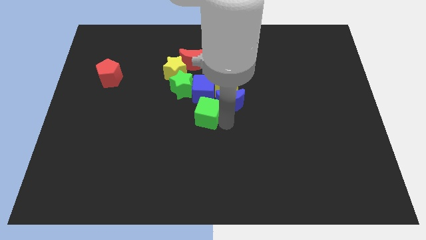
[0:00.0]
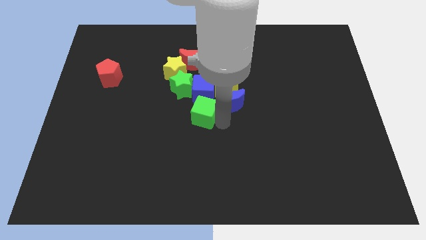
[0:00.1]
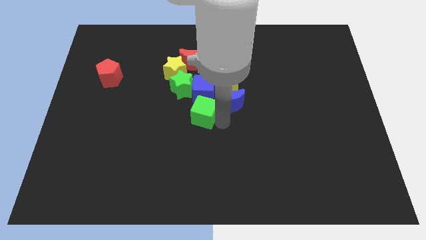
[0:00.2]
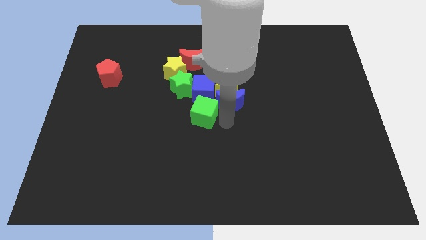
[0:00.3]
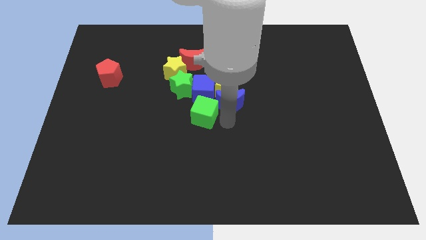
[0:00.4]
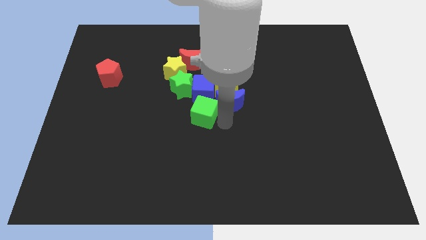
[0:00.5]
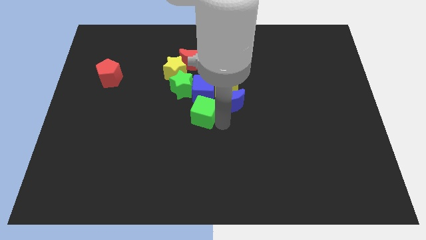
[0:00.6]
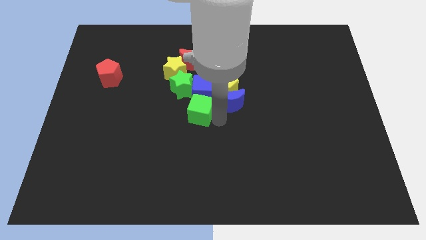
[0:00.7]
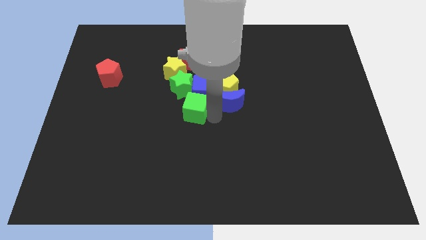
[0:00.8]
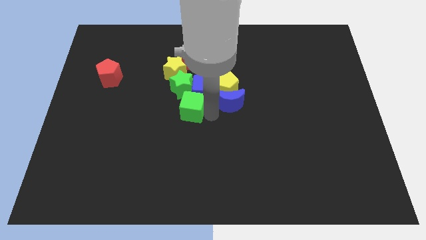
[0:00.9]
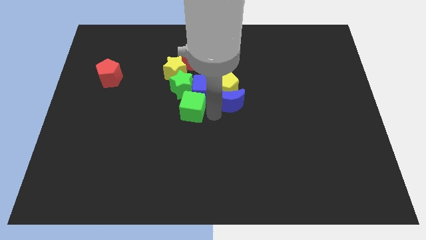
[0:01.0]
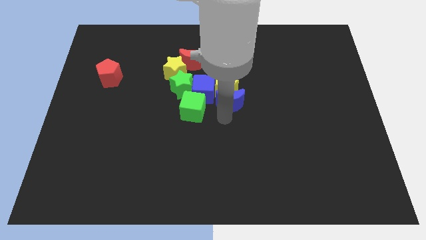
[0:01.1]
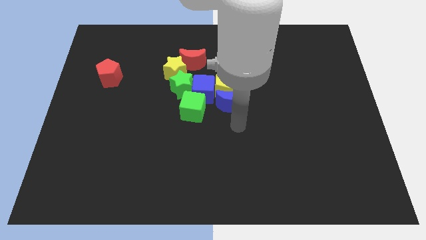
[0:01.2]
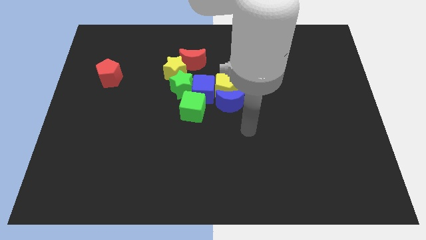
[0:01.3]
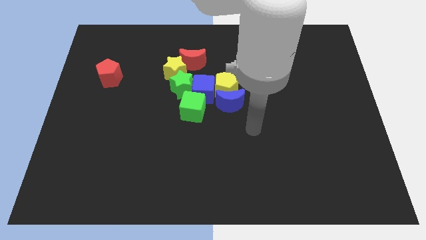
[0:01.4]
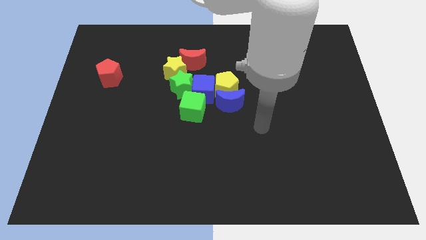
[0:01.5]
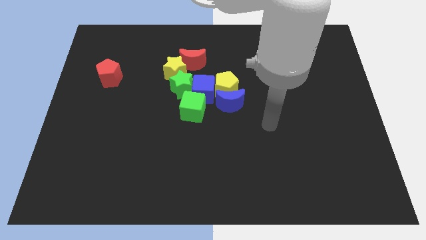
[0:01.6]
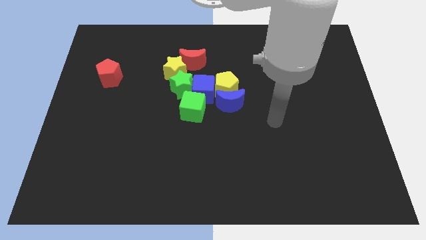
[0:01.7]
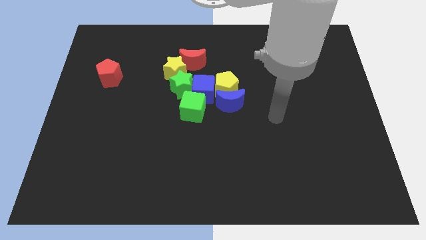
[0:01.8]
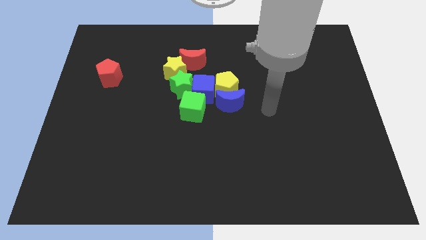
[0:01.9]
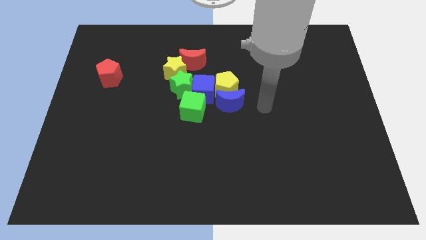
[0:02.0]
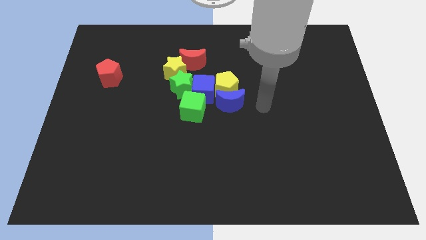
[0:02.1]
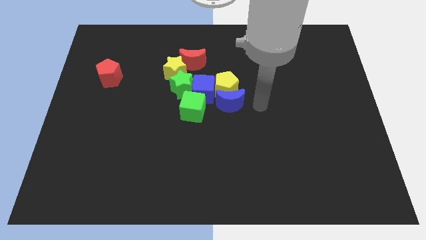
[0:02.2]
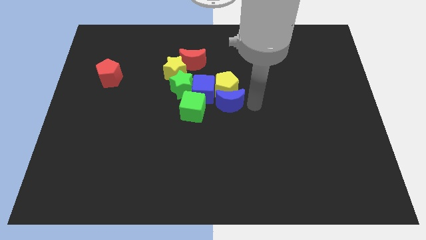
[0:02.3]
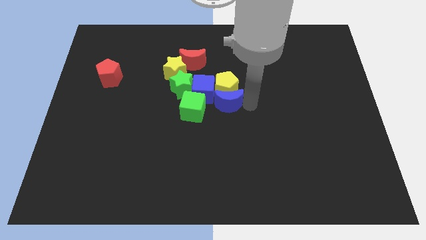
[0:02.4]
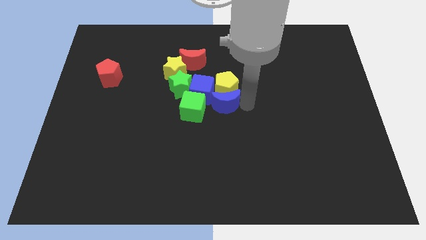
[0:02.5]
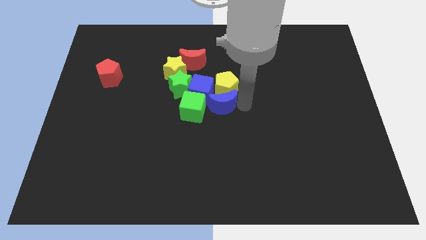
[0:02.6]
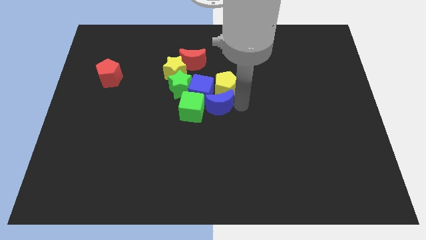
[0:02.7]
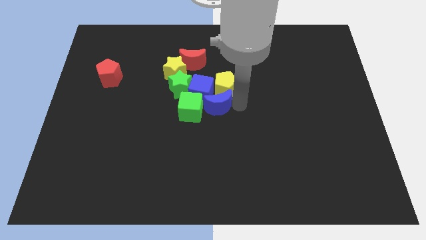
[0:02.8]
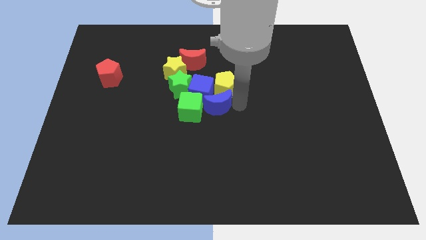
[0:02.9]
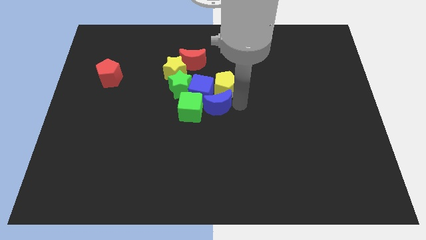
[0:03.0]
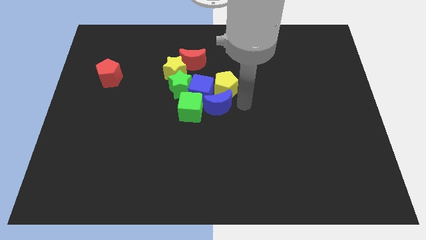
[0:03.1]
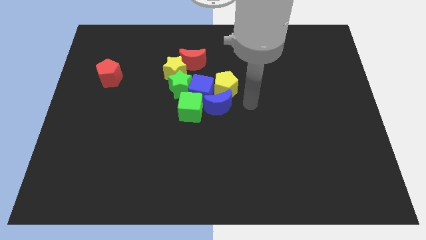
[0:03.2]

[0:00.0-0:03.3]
push the blue crescent into the green cube

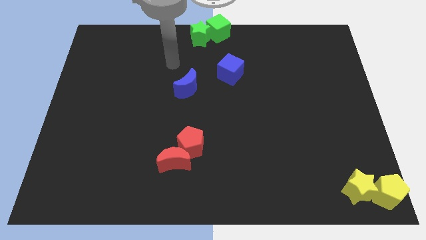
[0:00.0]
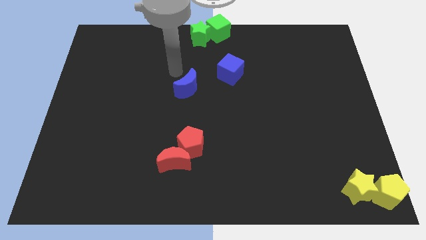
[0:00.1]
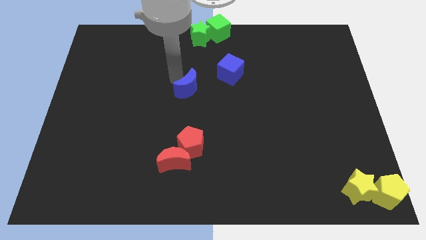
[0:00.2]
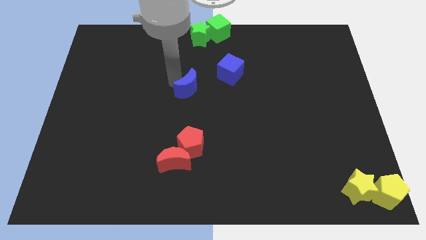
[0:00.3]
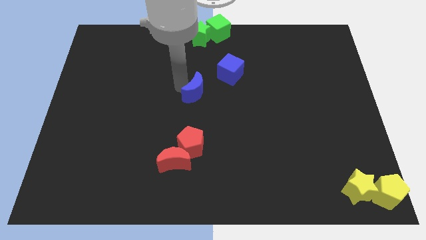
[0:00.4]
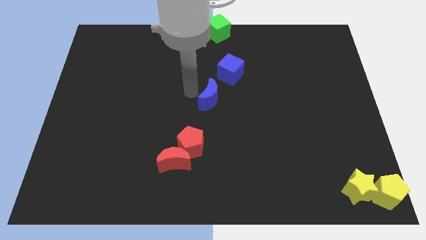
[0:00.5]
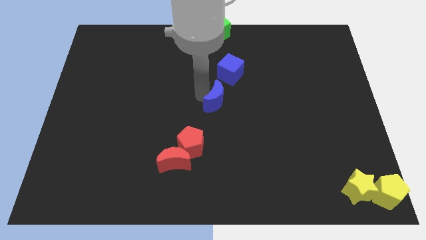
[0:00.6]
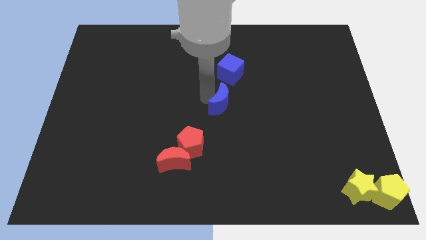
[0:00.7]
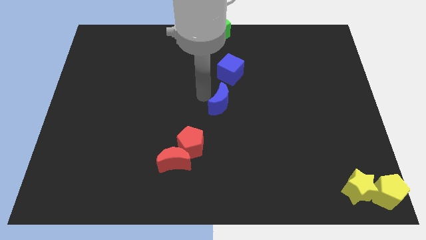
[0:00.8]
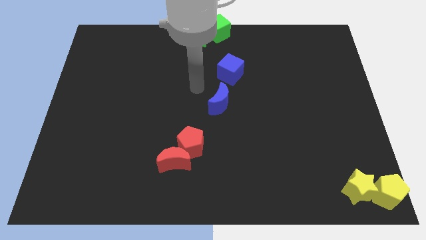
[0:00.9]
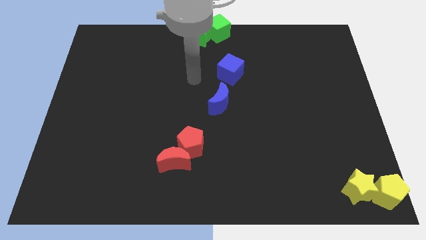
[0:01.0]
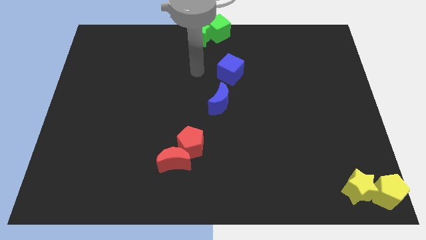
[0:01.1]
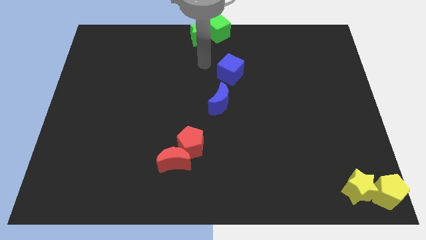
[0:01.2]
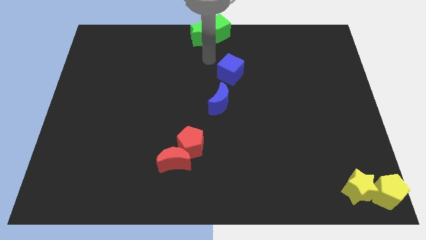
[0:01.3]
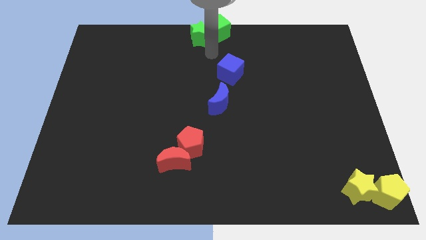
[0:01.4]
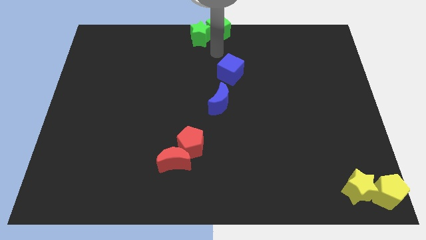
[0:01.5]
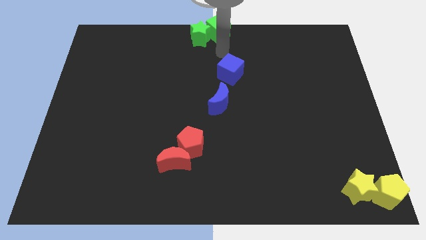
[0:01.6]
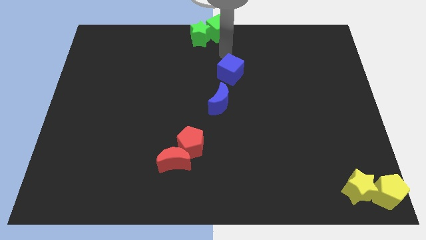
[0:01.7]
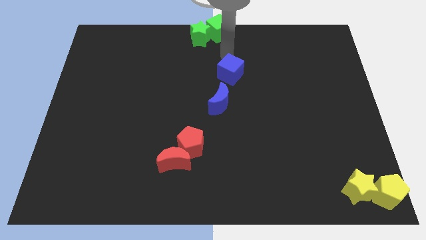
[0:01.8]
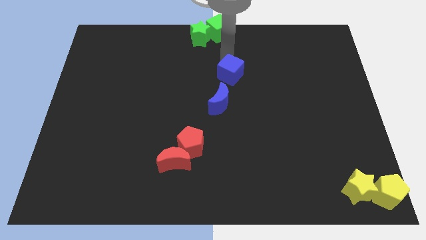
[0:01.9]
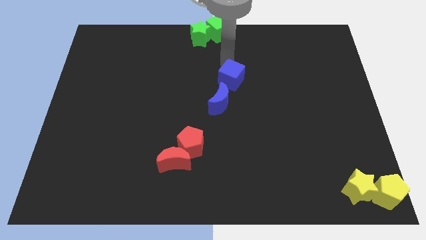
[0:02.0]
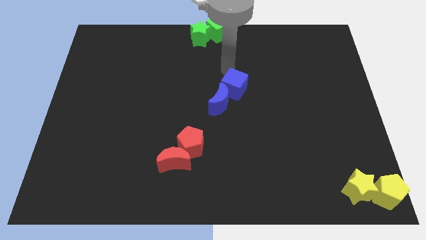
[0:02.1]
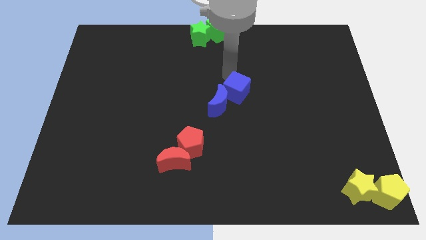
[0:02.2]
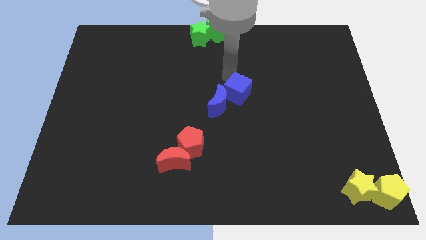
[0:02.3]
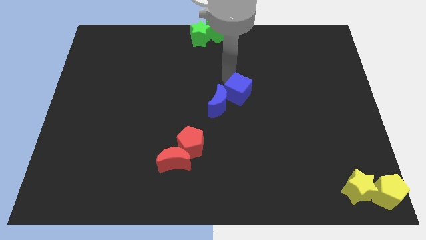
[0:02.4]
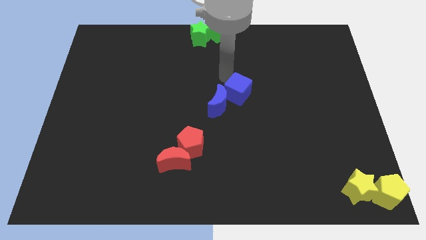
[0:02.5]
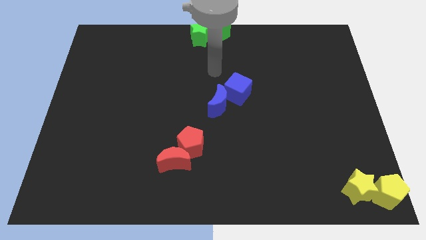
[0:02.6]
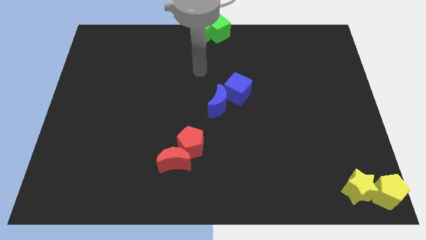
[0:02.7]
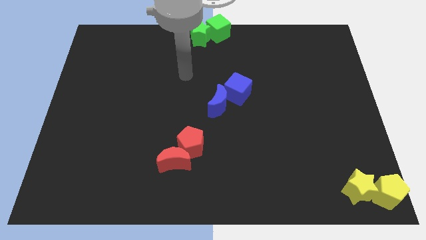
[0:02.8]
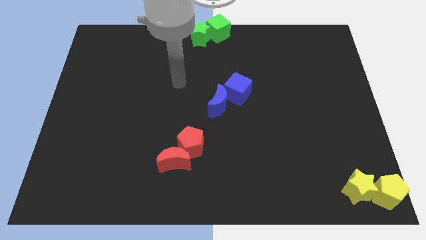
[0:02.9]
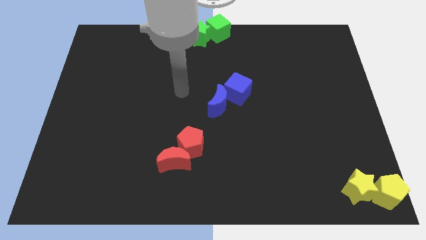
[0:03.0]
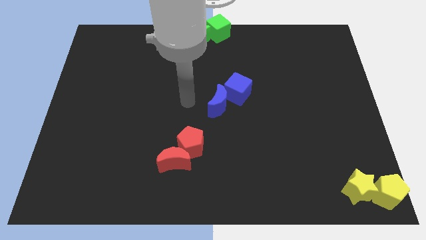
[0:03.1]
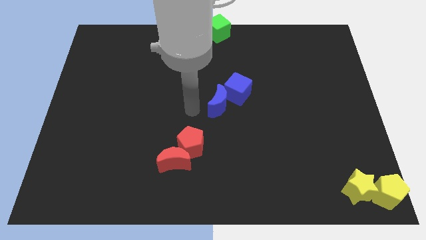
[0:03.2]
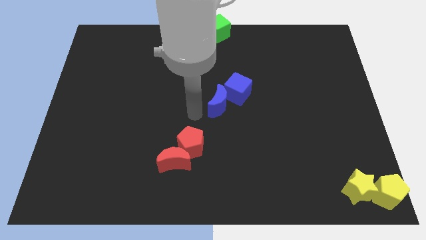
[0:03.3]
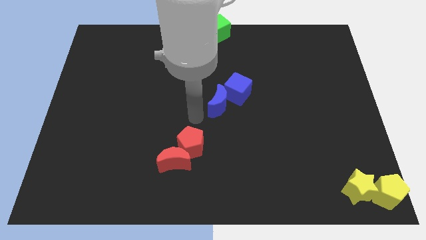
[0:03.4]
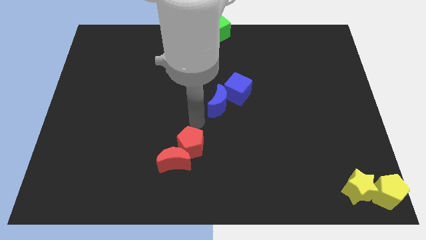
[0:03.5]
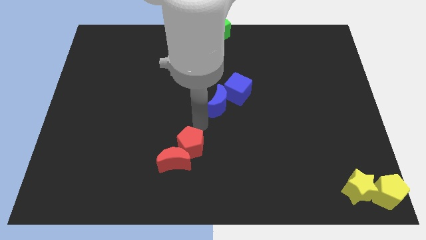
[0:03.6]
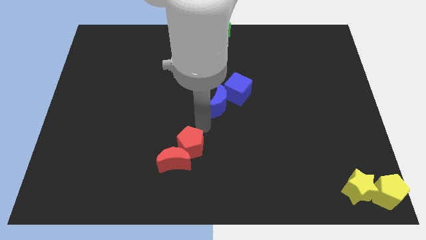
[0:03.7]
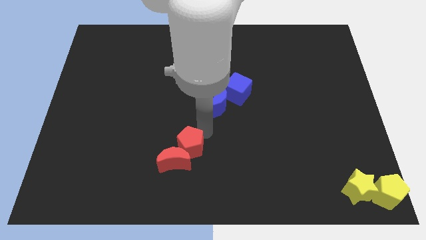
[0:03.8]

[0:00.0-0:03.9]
push both the blue blocks at the center of the board

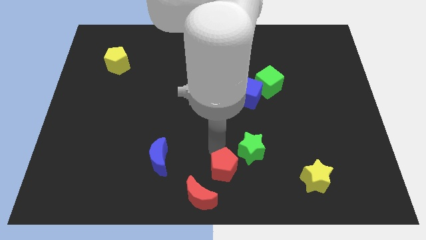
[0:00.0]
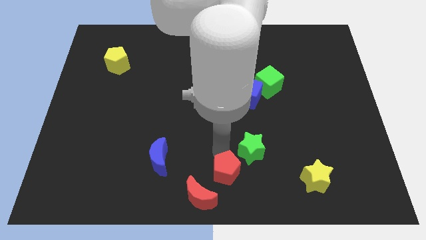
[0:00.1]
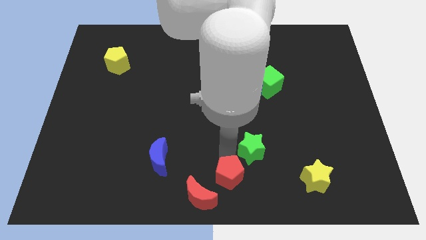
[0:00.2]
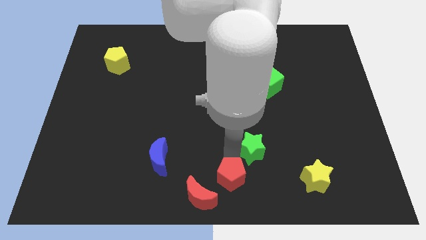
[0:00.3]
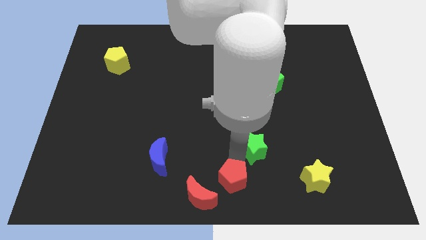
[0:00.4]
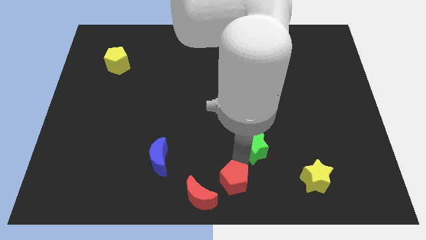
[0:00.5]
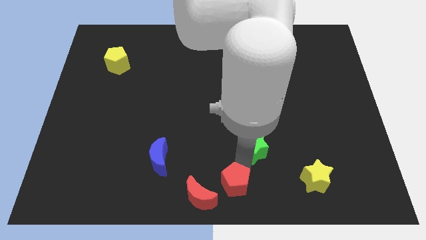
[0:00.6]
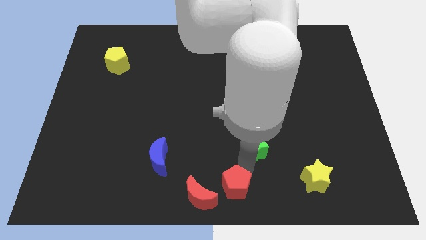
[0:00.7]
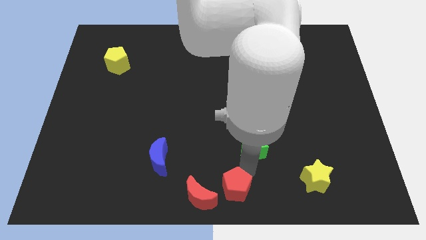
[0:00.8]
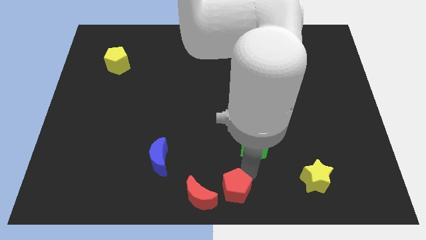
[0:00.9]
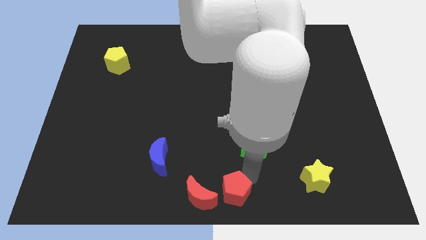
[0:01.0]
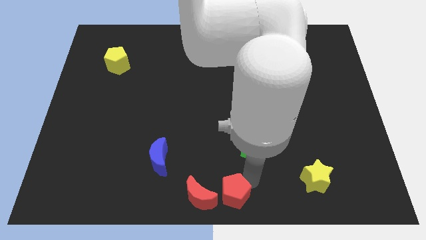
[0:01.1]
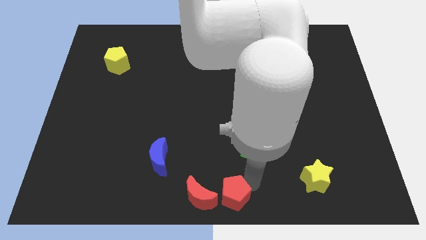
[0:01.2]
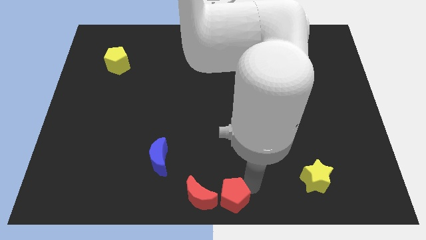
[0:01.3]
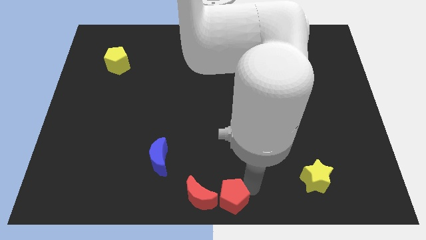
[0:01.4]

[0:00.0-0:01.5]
push the red pentagon to the right of the red crescent

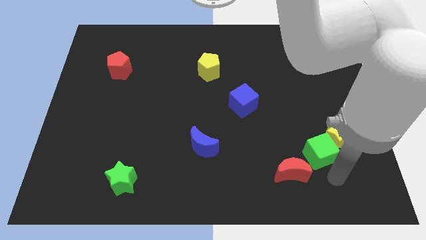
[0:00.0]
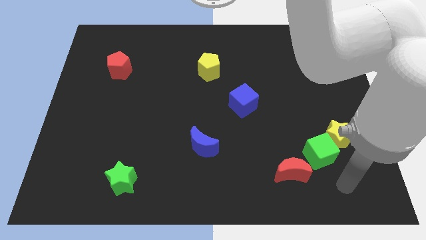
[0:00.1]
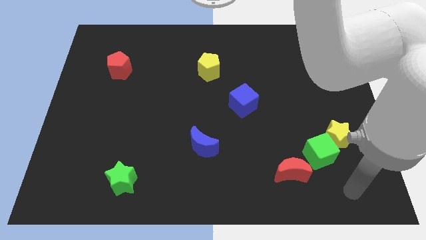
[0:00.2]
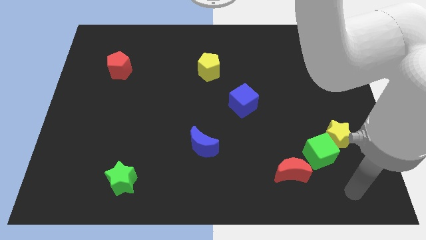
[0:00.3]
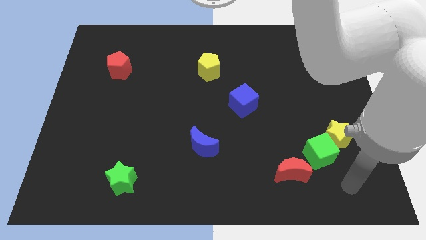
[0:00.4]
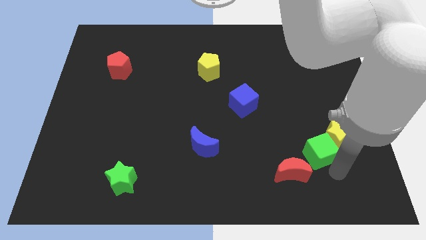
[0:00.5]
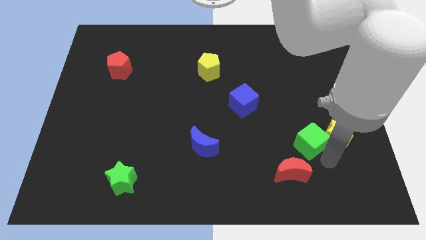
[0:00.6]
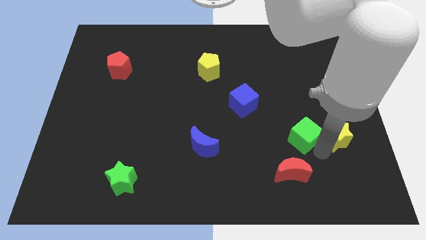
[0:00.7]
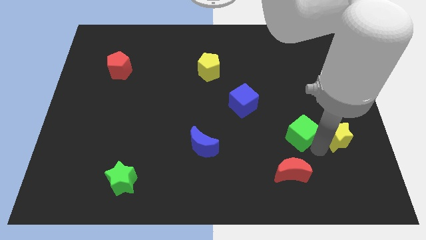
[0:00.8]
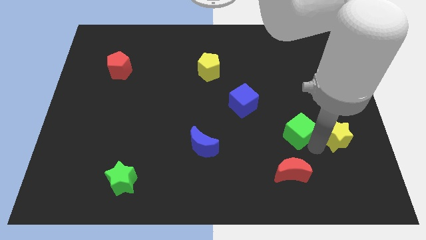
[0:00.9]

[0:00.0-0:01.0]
separate green cube from yellow star and red moon
